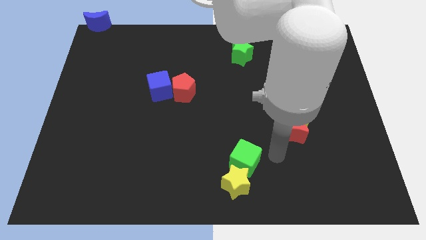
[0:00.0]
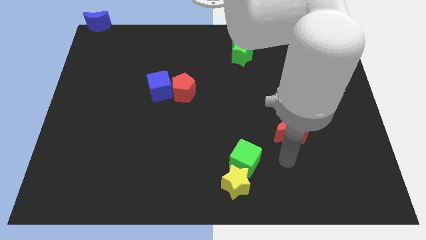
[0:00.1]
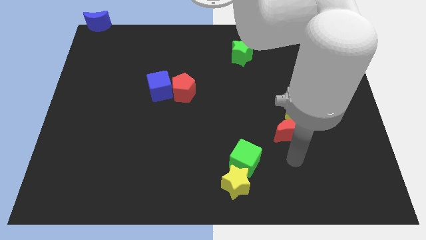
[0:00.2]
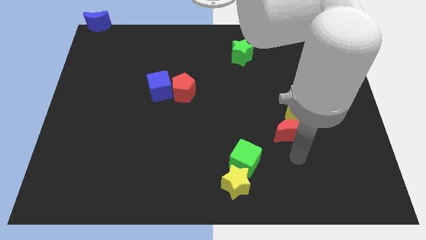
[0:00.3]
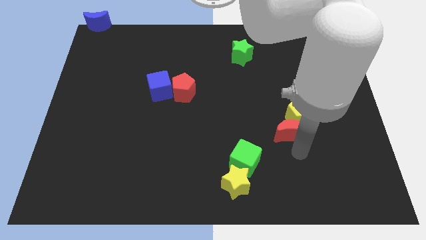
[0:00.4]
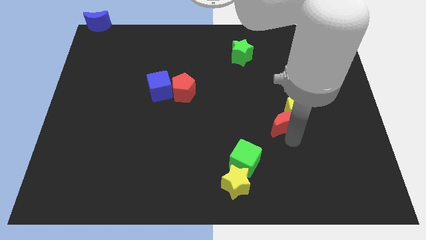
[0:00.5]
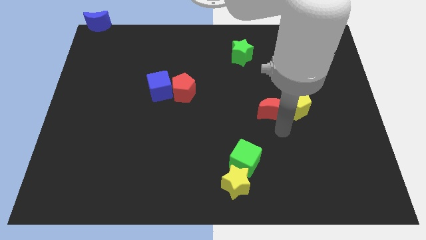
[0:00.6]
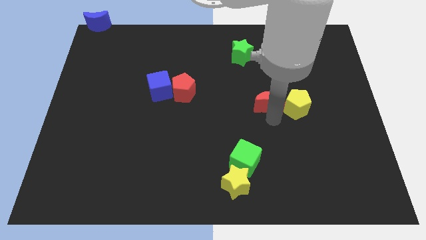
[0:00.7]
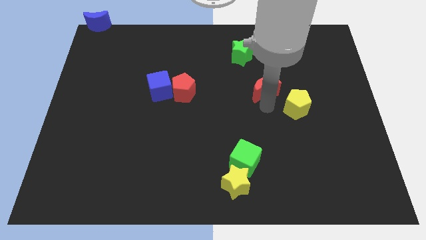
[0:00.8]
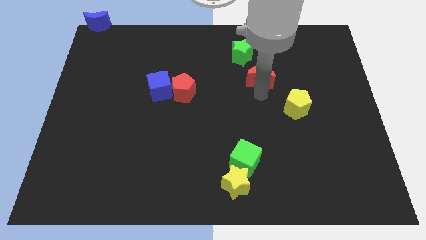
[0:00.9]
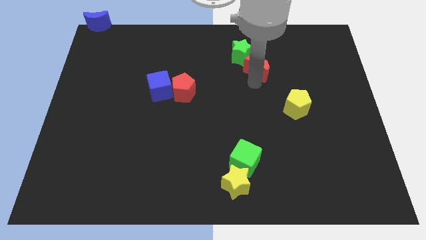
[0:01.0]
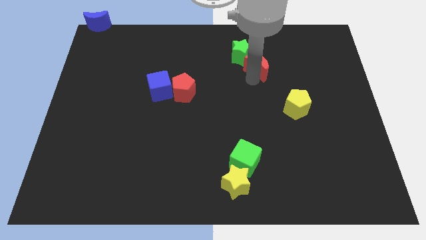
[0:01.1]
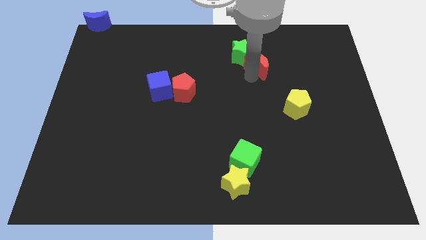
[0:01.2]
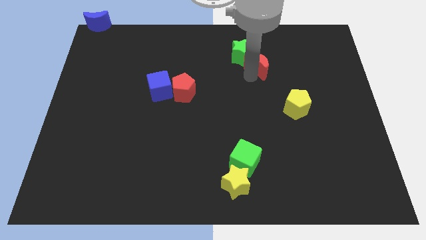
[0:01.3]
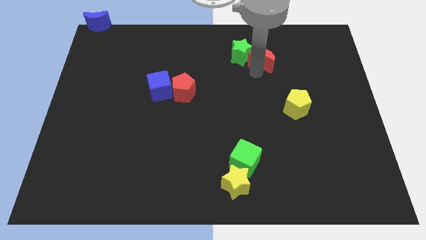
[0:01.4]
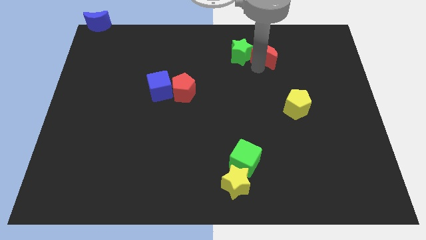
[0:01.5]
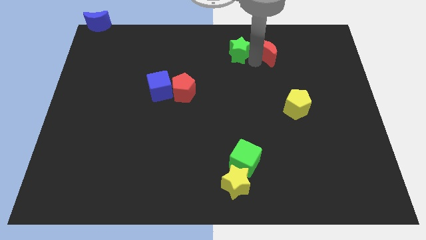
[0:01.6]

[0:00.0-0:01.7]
move red moon to the right of the green star

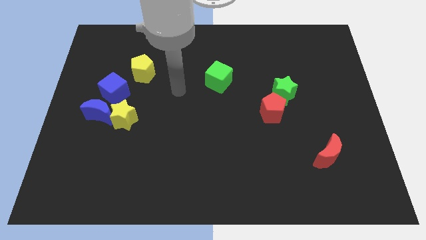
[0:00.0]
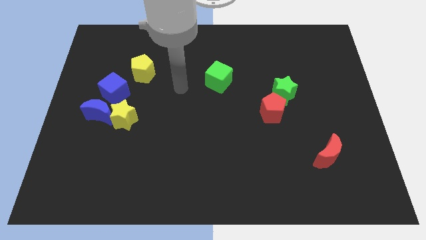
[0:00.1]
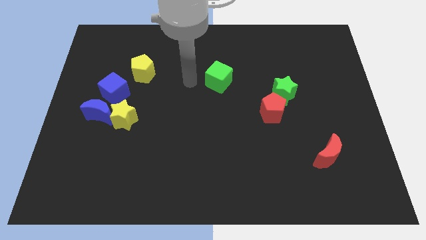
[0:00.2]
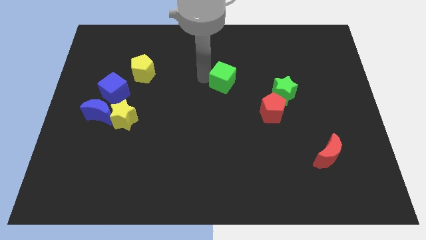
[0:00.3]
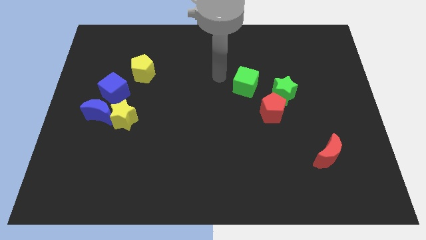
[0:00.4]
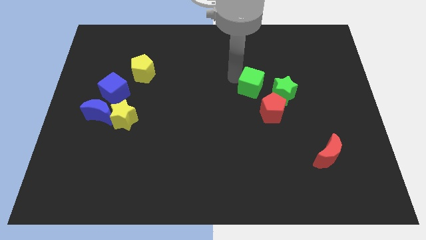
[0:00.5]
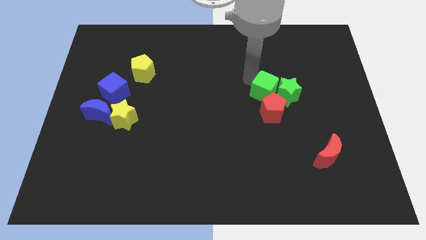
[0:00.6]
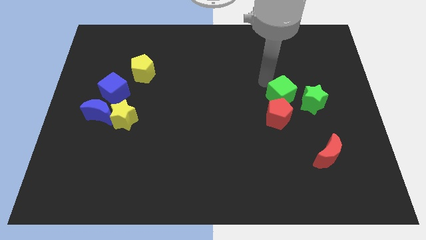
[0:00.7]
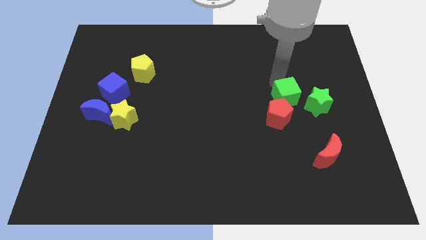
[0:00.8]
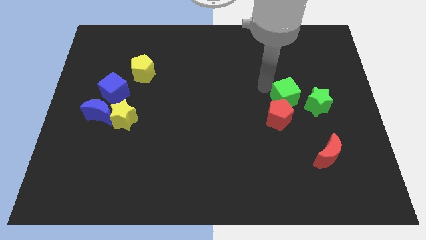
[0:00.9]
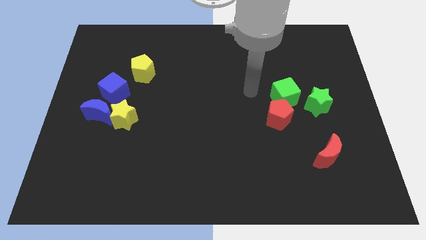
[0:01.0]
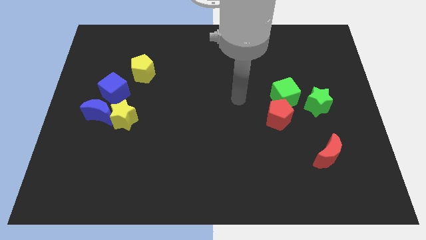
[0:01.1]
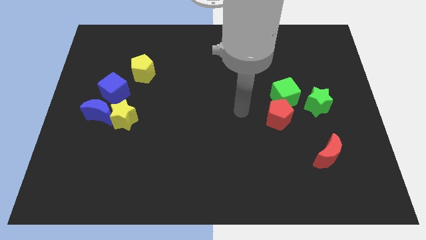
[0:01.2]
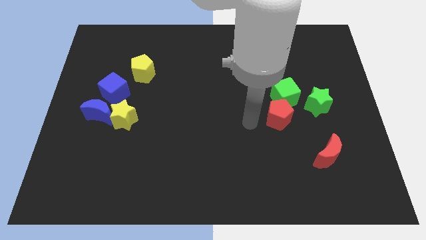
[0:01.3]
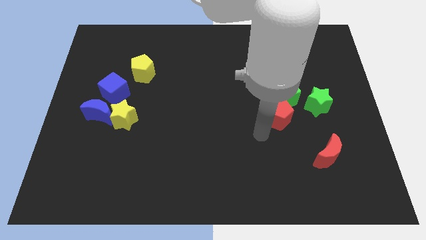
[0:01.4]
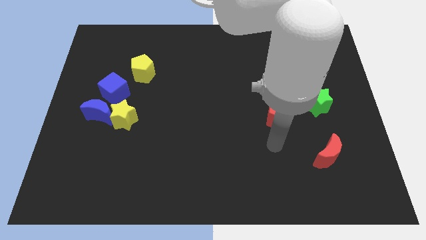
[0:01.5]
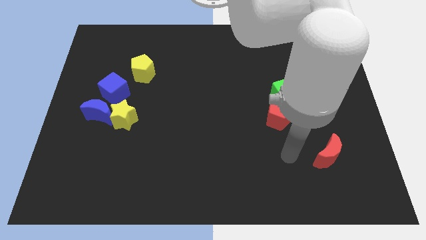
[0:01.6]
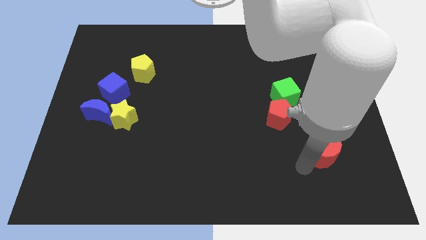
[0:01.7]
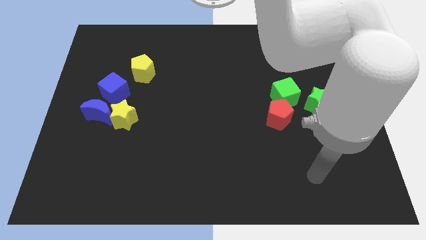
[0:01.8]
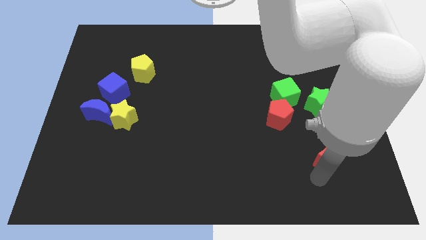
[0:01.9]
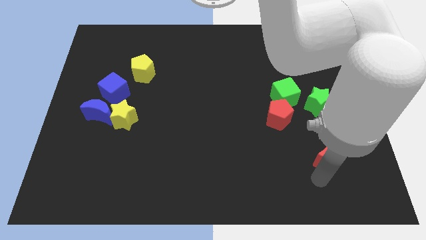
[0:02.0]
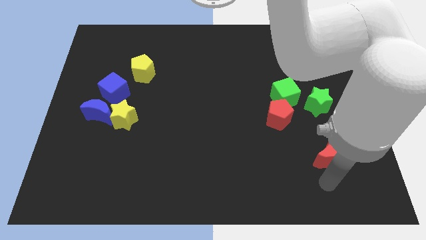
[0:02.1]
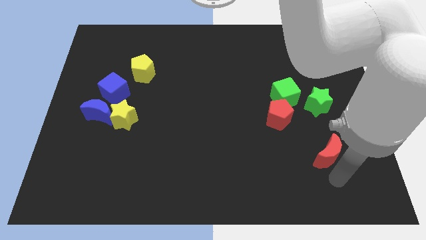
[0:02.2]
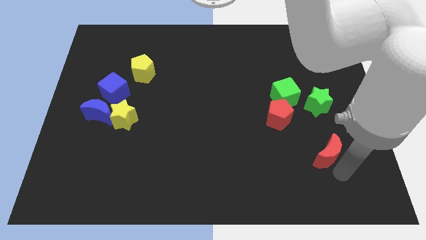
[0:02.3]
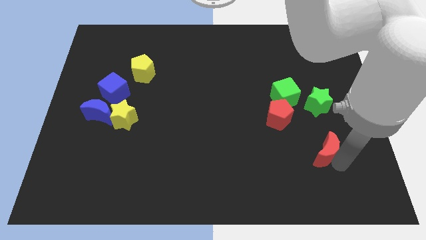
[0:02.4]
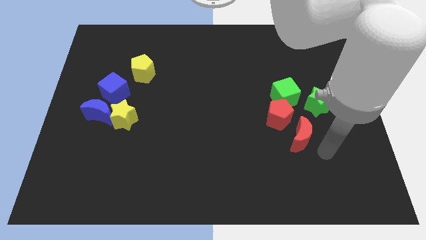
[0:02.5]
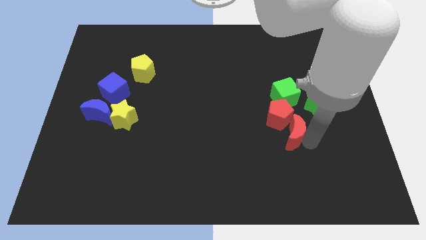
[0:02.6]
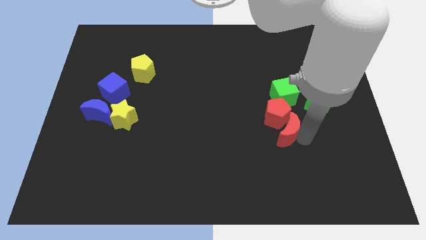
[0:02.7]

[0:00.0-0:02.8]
group up all the red and green blocks together

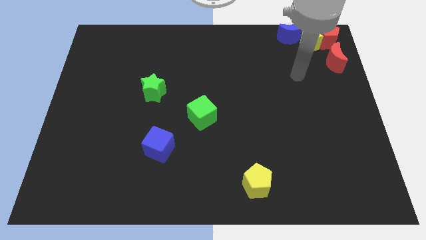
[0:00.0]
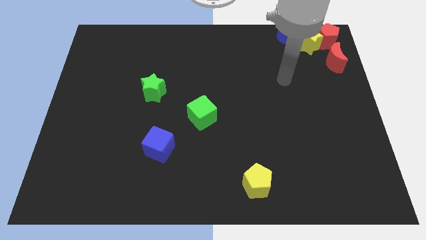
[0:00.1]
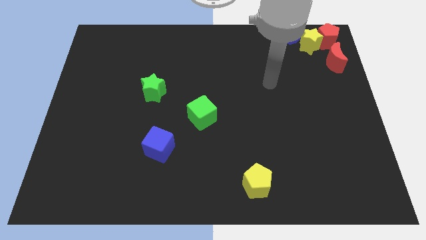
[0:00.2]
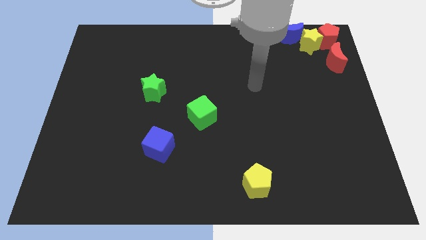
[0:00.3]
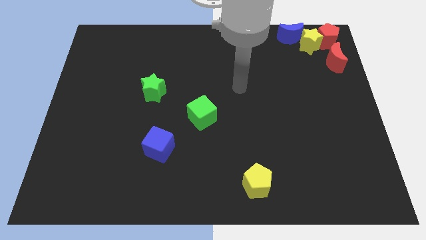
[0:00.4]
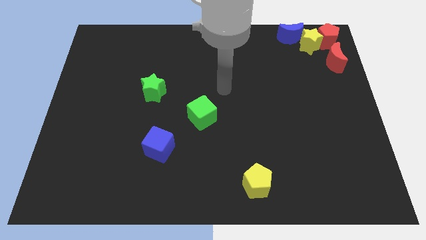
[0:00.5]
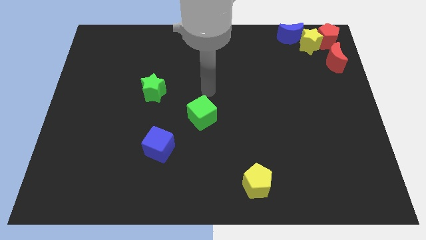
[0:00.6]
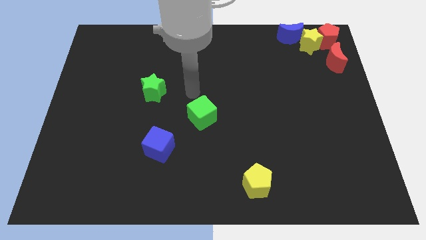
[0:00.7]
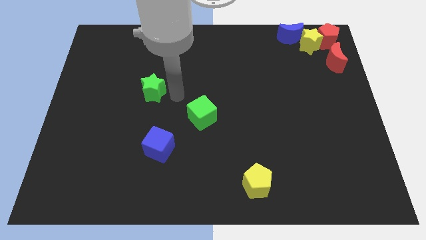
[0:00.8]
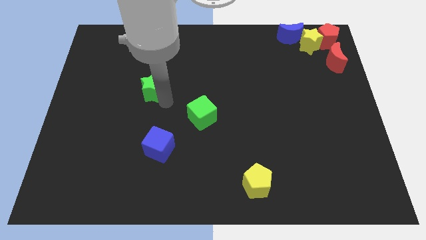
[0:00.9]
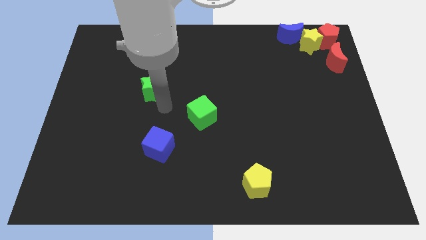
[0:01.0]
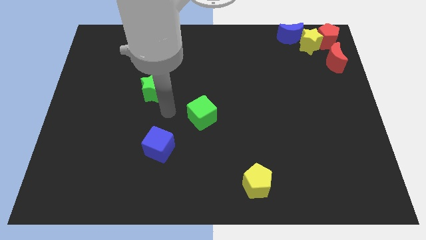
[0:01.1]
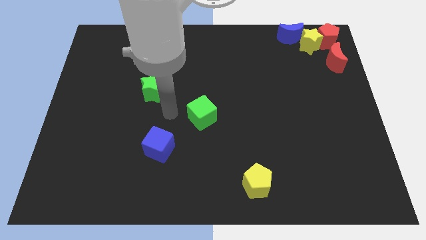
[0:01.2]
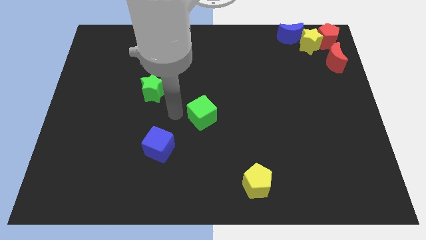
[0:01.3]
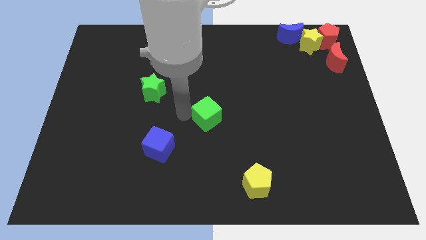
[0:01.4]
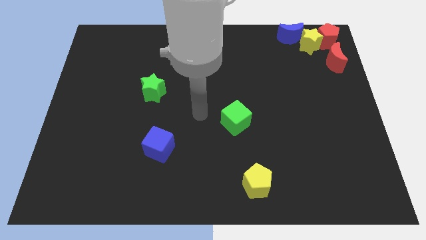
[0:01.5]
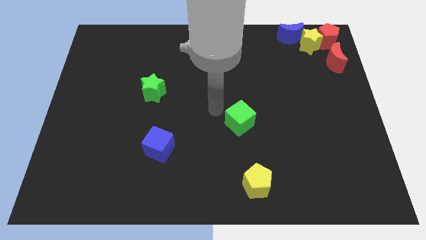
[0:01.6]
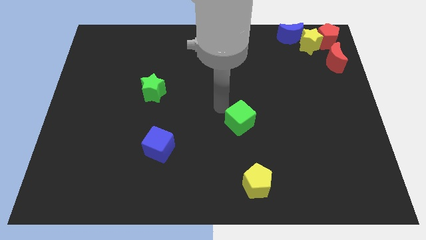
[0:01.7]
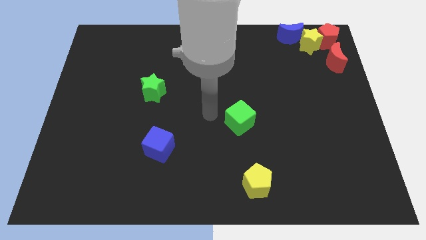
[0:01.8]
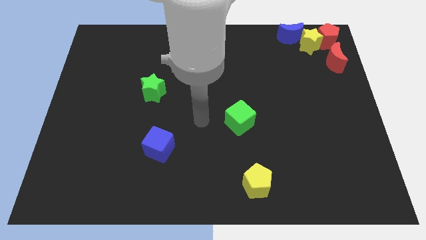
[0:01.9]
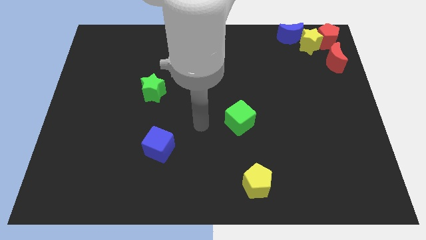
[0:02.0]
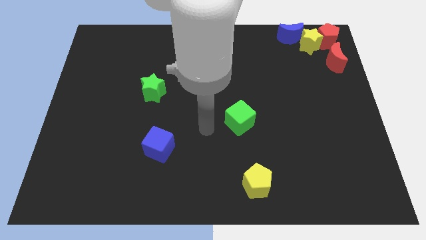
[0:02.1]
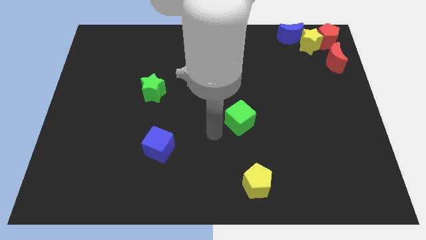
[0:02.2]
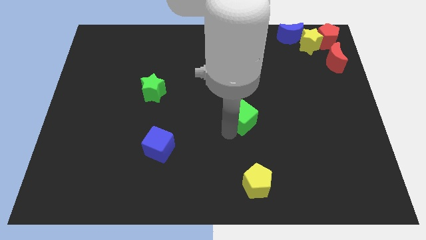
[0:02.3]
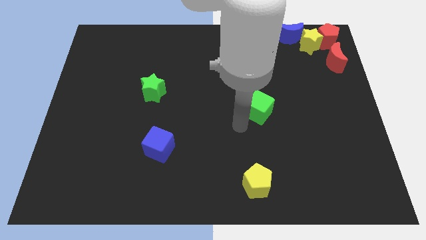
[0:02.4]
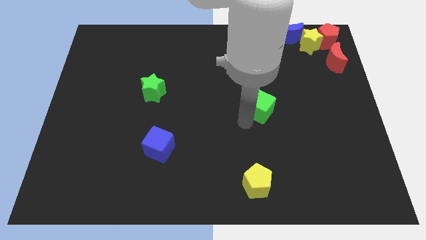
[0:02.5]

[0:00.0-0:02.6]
push green cube above yellow pentagon

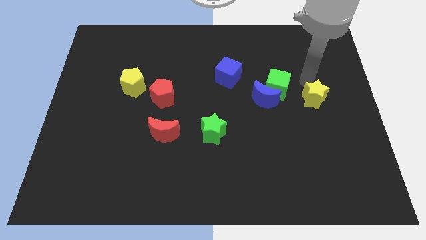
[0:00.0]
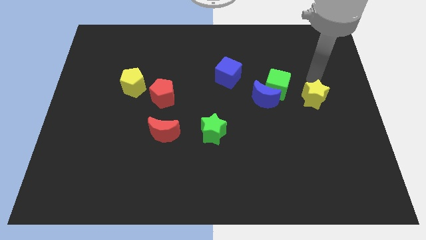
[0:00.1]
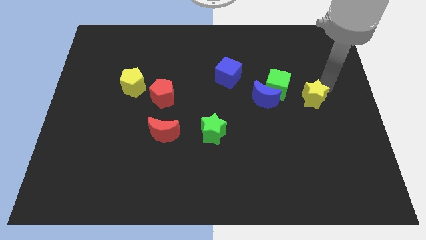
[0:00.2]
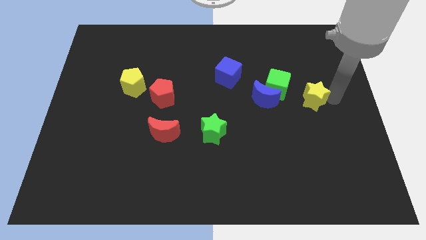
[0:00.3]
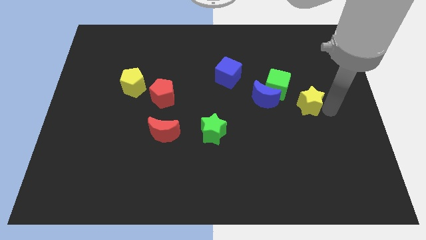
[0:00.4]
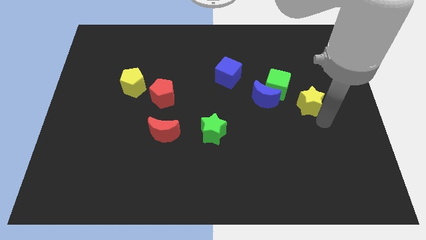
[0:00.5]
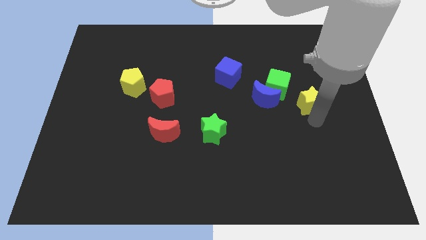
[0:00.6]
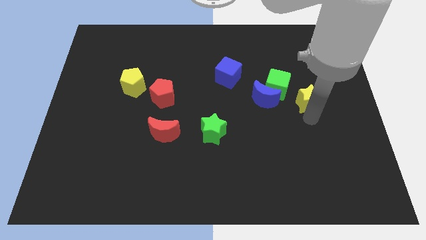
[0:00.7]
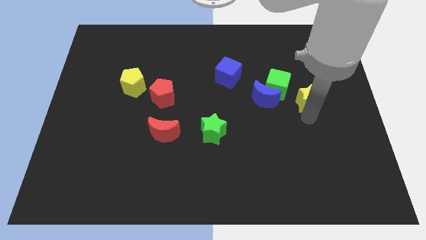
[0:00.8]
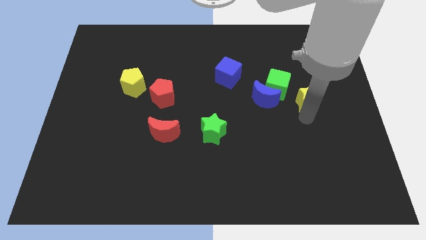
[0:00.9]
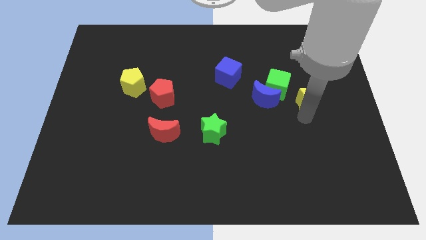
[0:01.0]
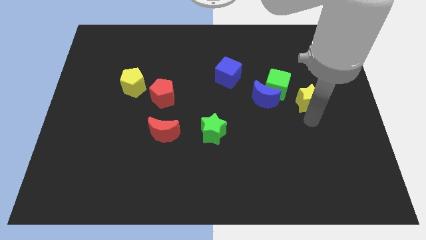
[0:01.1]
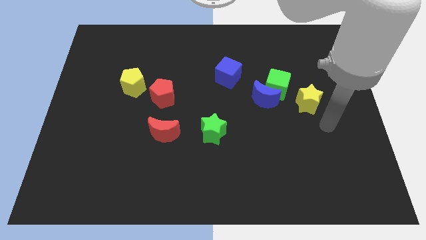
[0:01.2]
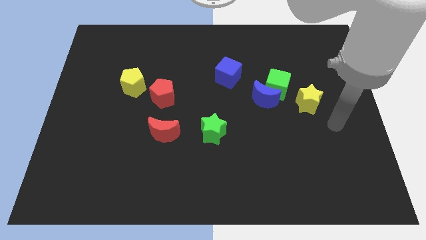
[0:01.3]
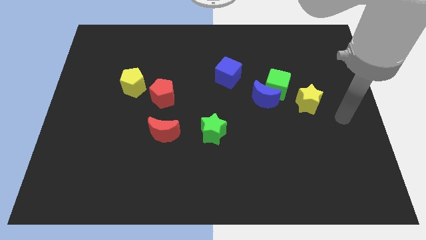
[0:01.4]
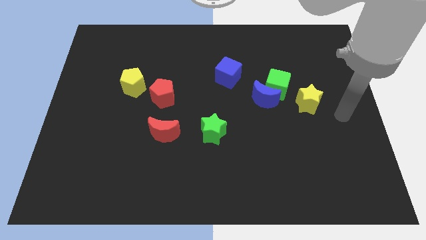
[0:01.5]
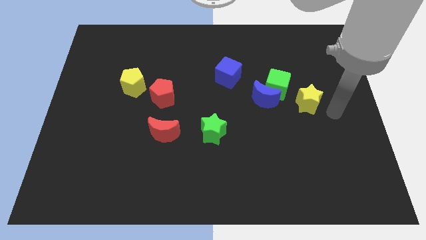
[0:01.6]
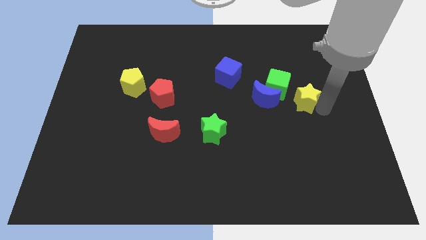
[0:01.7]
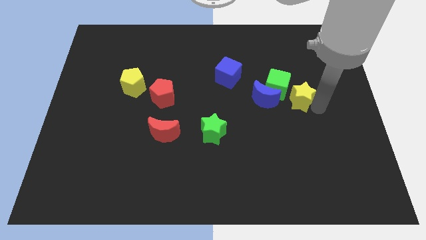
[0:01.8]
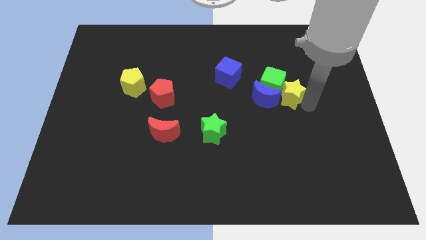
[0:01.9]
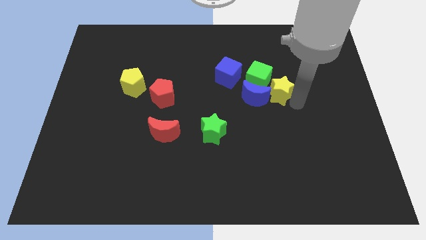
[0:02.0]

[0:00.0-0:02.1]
push the yellow star into the green cube

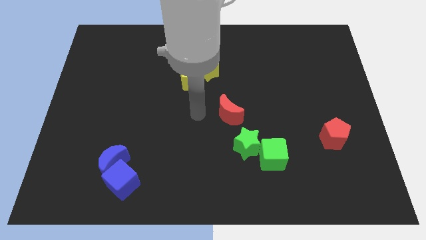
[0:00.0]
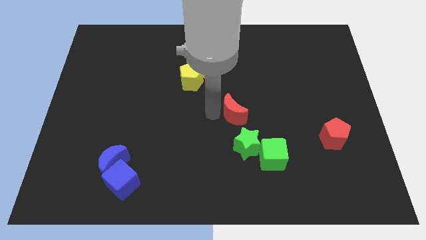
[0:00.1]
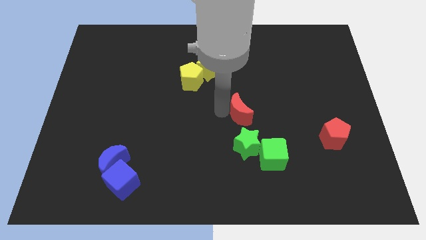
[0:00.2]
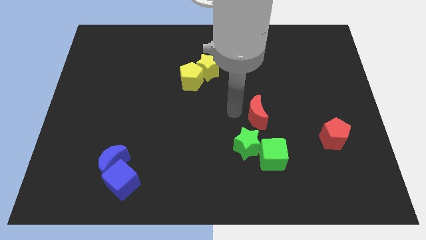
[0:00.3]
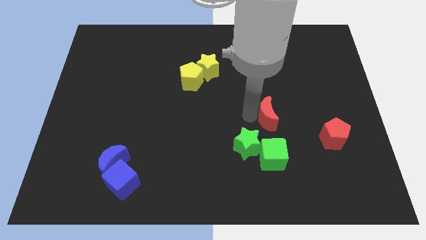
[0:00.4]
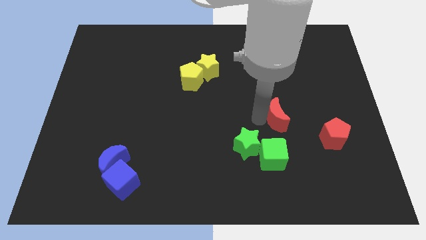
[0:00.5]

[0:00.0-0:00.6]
put the red moon above the green cube
